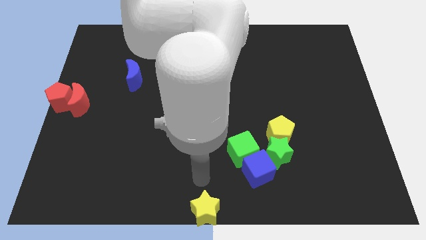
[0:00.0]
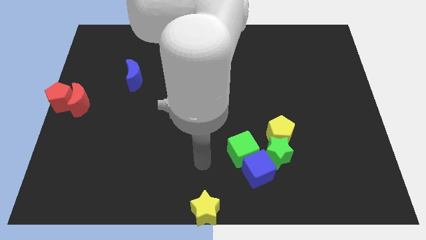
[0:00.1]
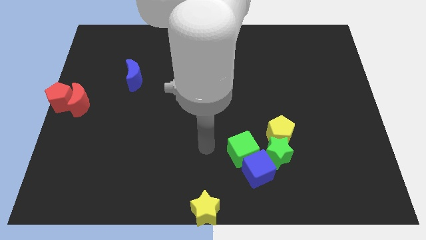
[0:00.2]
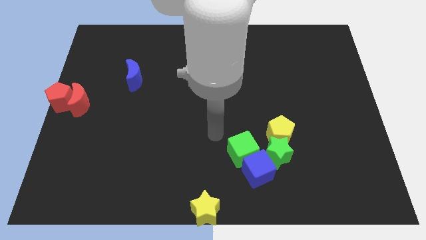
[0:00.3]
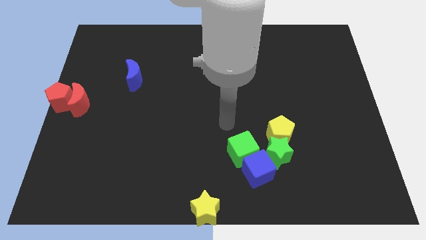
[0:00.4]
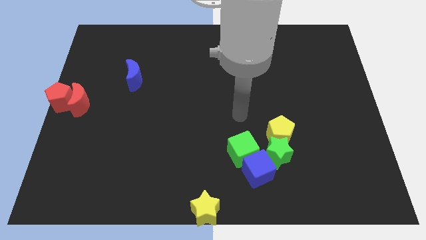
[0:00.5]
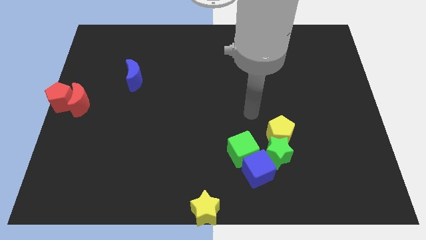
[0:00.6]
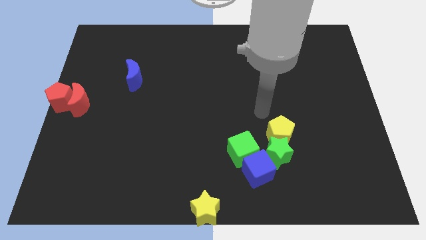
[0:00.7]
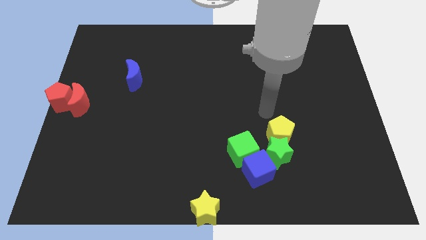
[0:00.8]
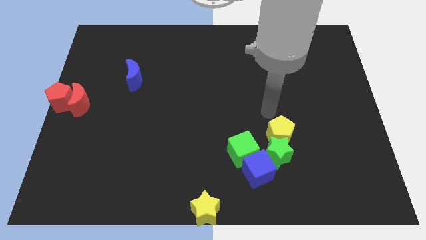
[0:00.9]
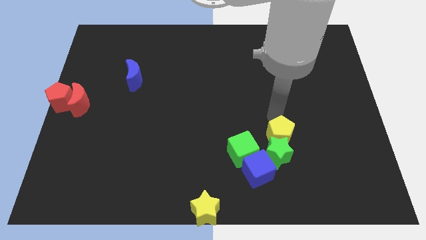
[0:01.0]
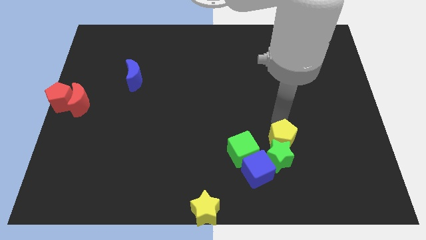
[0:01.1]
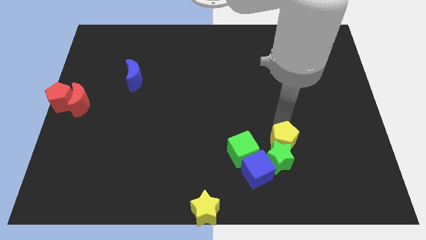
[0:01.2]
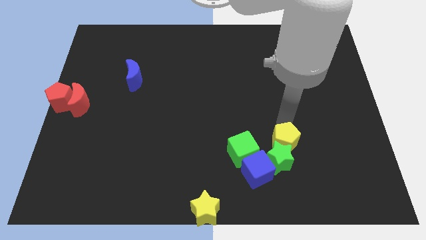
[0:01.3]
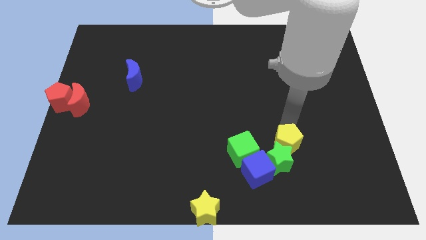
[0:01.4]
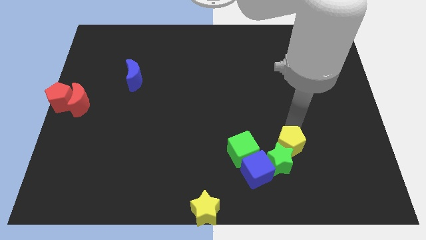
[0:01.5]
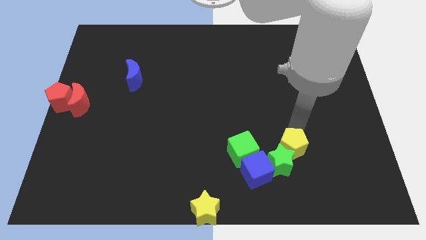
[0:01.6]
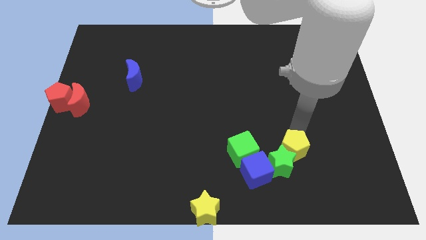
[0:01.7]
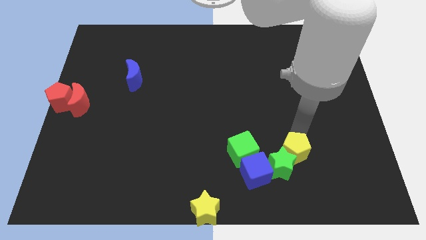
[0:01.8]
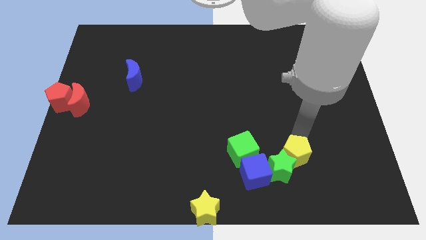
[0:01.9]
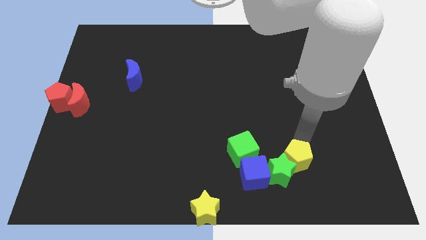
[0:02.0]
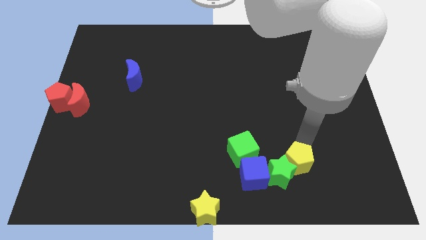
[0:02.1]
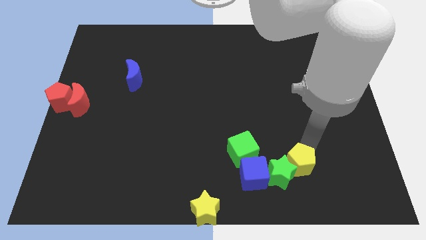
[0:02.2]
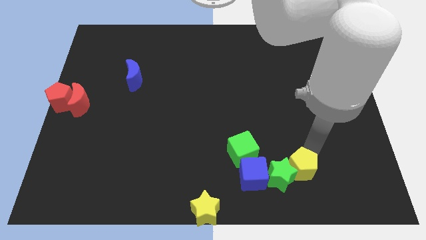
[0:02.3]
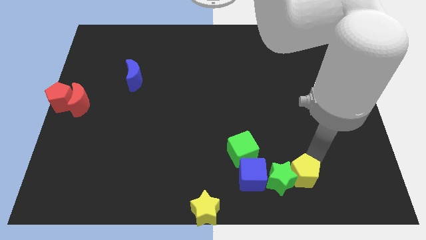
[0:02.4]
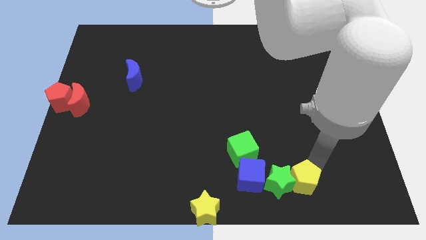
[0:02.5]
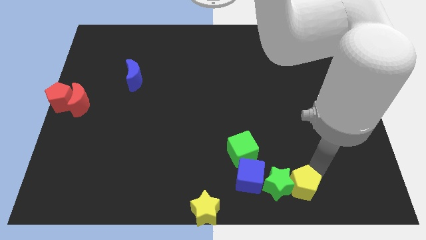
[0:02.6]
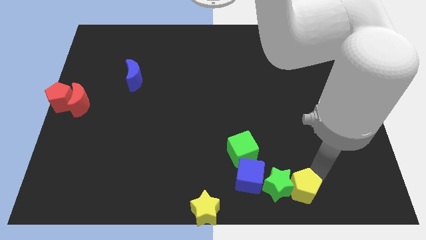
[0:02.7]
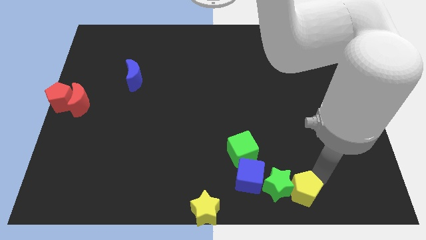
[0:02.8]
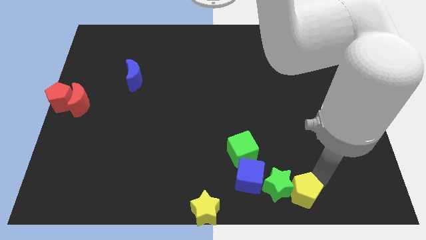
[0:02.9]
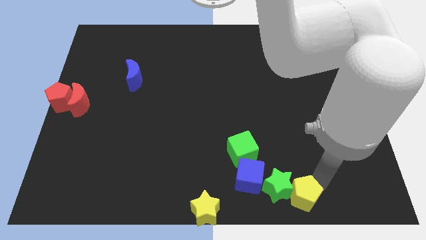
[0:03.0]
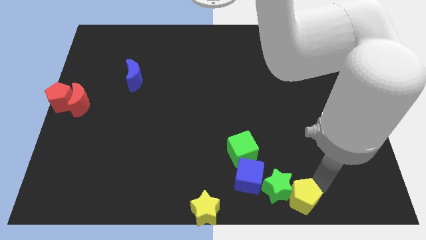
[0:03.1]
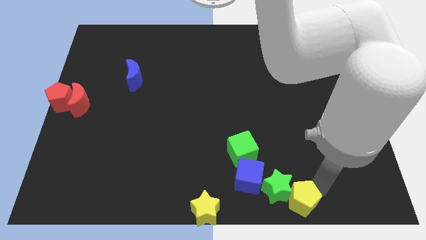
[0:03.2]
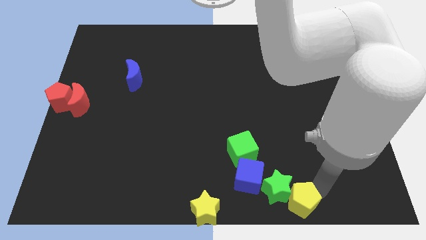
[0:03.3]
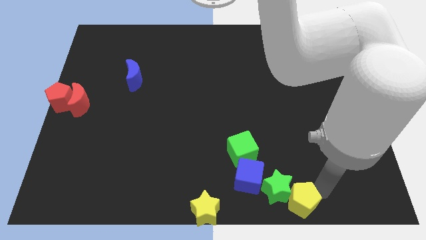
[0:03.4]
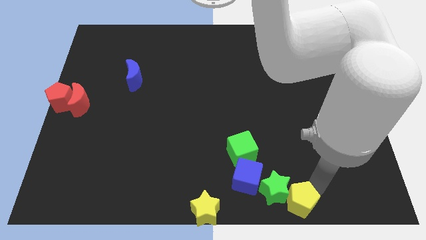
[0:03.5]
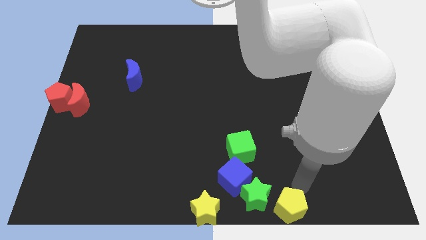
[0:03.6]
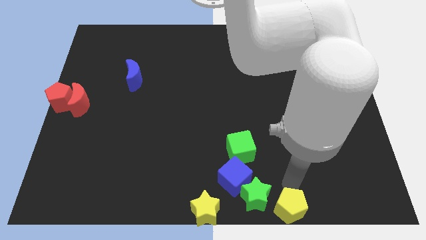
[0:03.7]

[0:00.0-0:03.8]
separate the yellow pentagon from the group of blocks

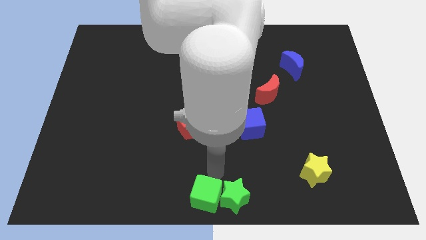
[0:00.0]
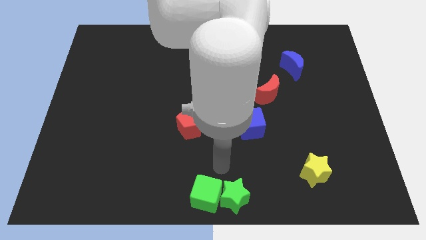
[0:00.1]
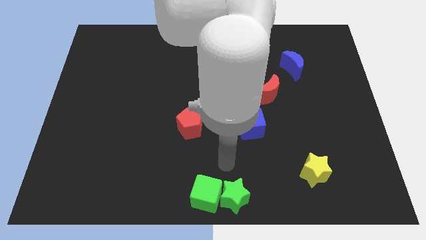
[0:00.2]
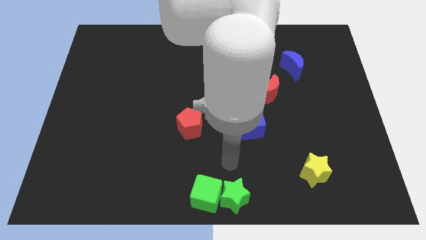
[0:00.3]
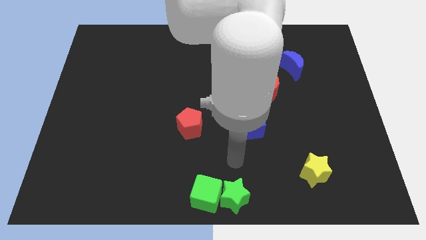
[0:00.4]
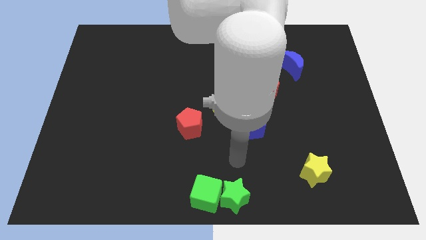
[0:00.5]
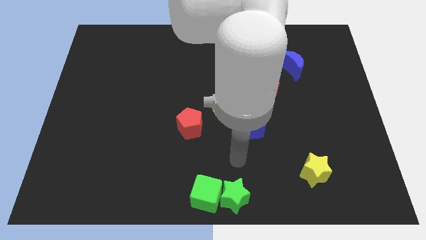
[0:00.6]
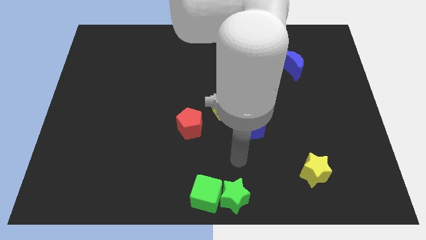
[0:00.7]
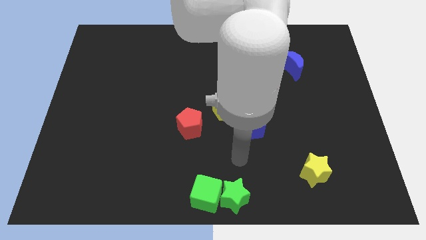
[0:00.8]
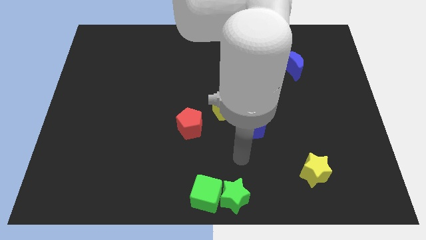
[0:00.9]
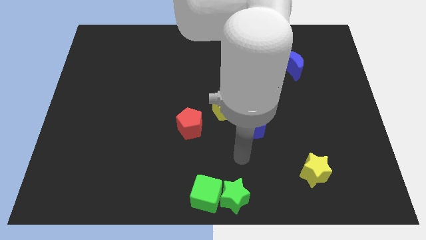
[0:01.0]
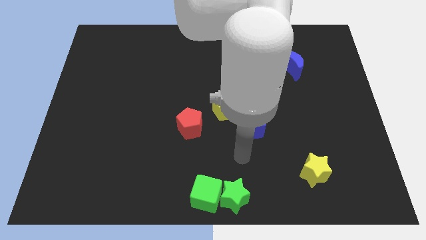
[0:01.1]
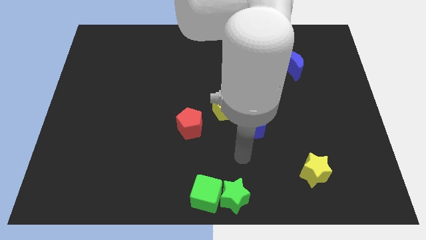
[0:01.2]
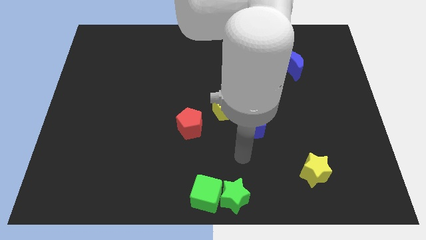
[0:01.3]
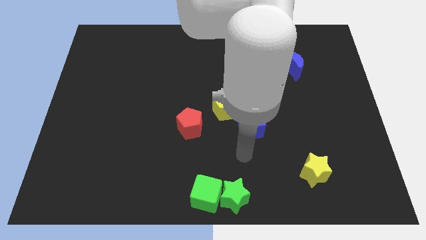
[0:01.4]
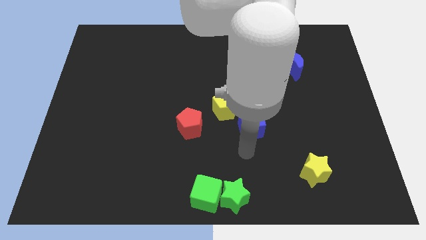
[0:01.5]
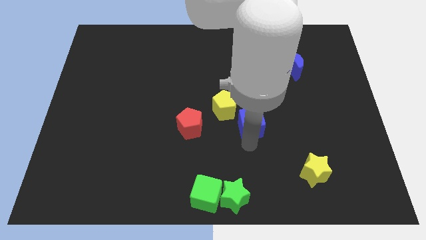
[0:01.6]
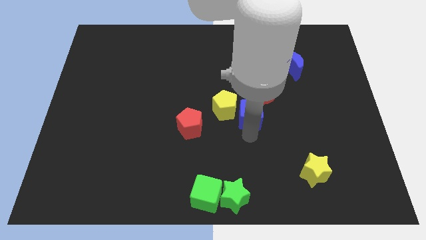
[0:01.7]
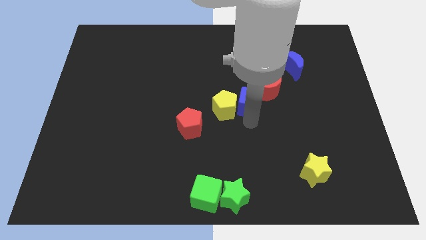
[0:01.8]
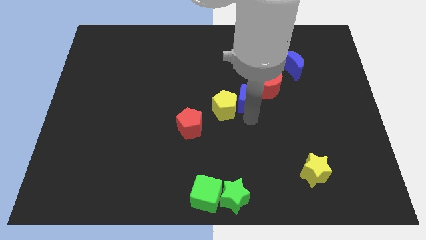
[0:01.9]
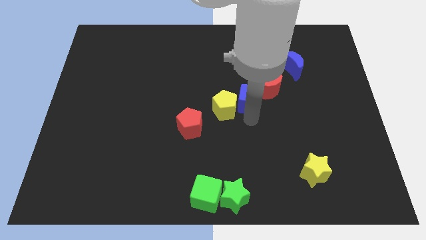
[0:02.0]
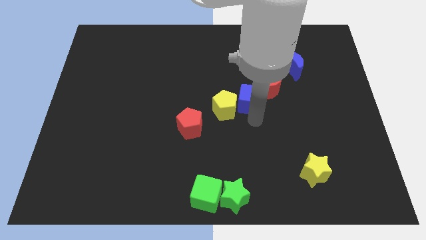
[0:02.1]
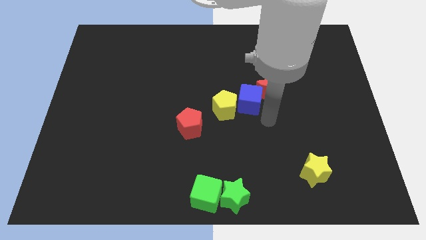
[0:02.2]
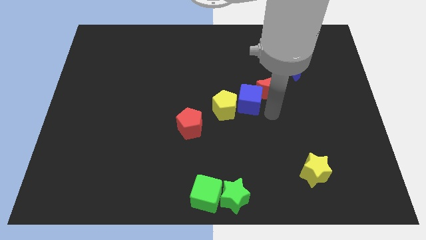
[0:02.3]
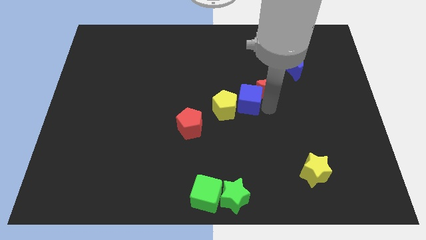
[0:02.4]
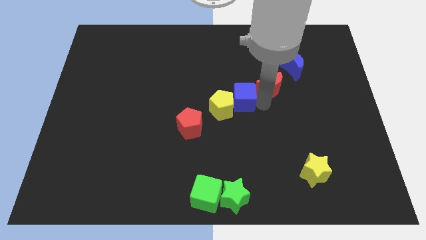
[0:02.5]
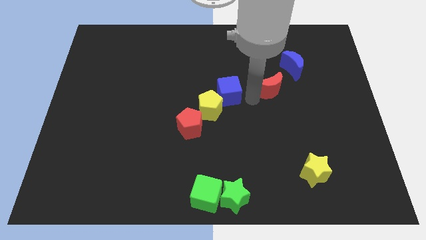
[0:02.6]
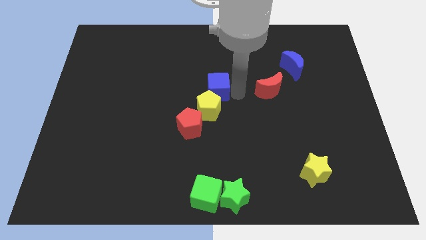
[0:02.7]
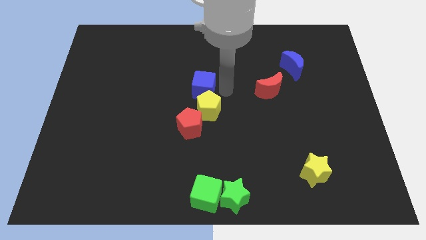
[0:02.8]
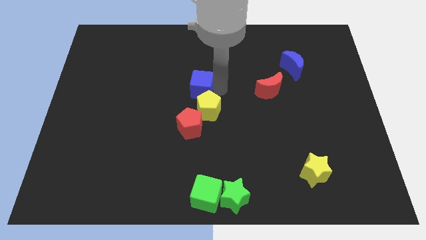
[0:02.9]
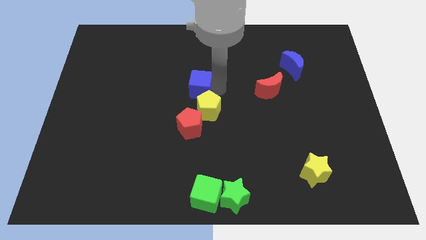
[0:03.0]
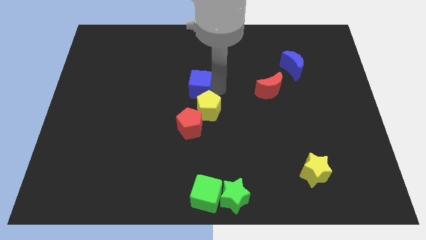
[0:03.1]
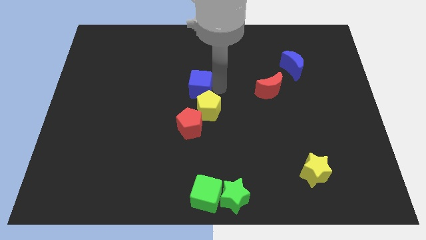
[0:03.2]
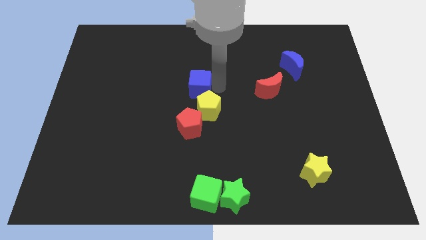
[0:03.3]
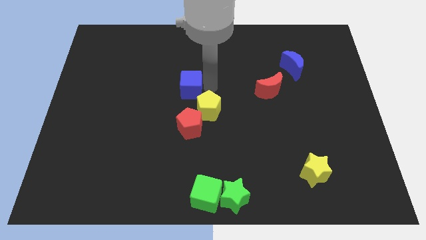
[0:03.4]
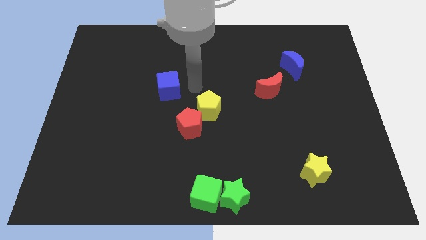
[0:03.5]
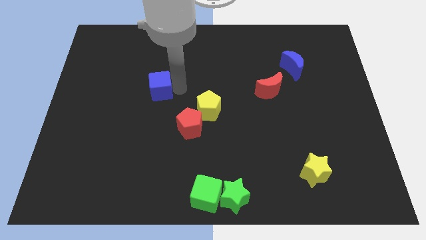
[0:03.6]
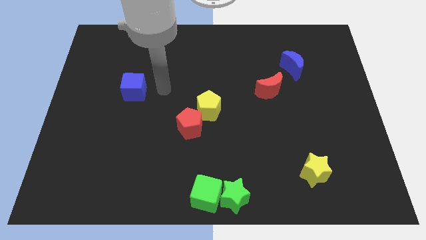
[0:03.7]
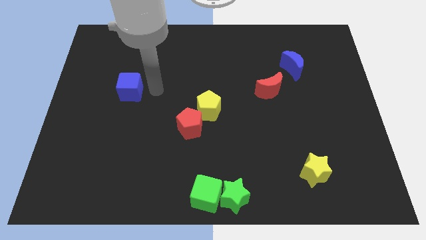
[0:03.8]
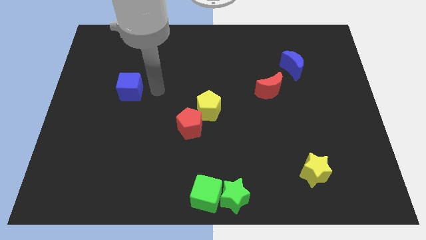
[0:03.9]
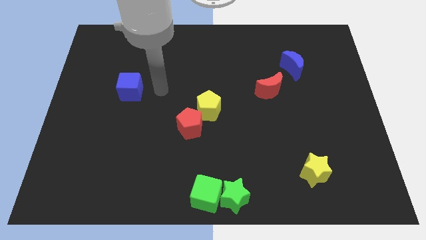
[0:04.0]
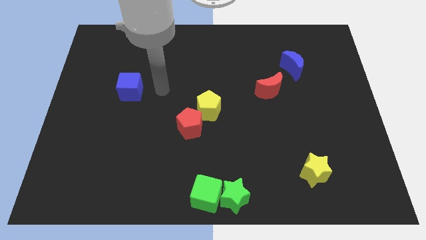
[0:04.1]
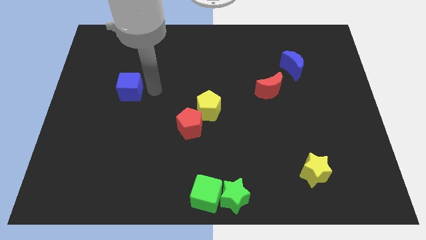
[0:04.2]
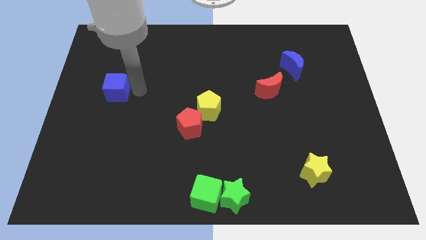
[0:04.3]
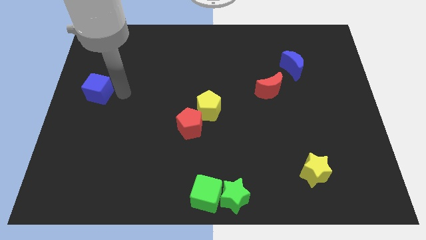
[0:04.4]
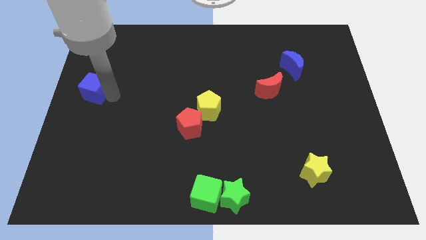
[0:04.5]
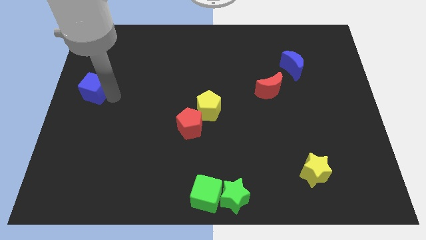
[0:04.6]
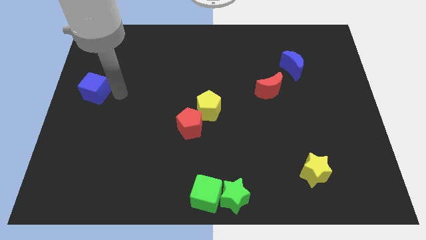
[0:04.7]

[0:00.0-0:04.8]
move the blue block to the left center to the board

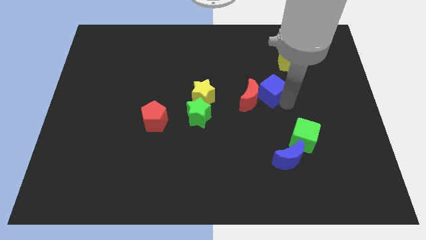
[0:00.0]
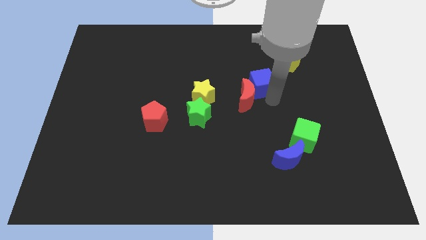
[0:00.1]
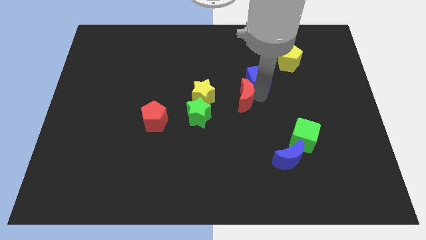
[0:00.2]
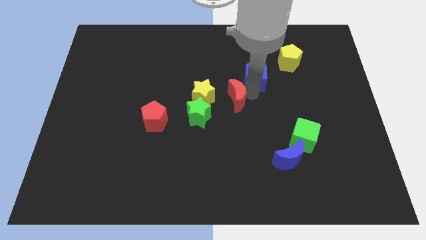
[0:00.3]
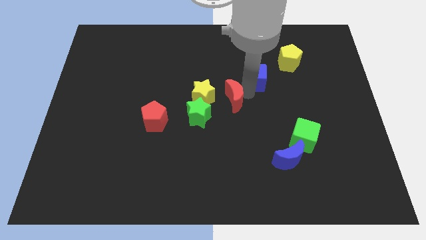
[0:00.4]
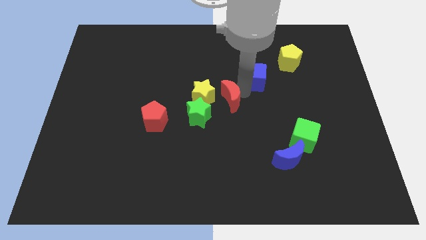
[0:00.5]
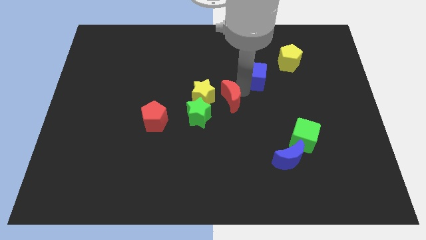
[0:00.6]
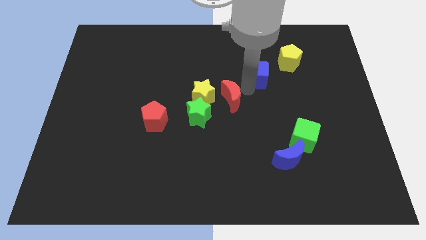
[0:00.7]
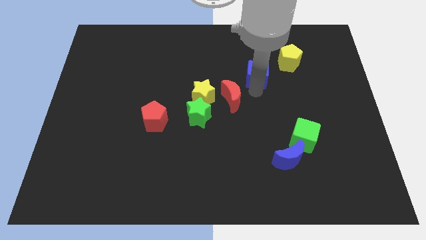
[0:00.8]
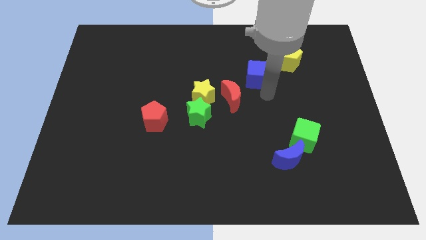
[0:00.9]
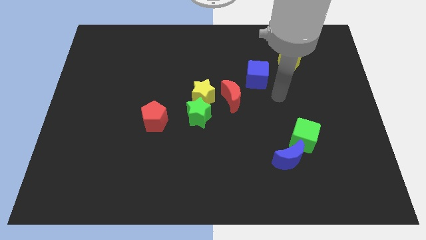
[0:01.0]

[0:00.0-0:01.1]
place blue cube in between red moon and yellow pentagon
